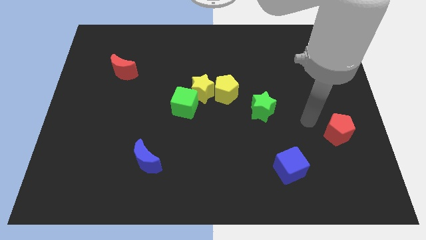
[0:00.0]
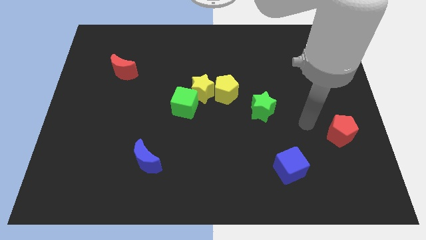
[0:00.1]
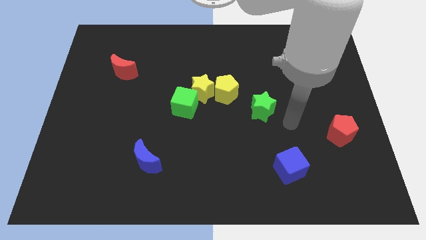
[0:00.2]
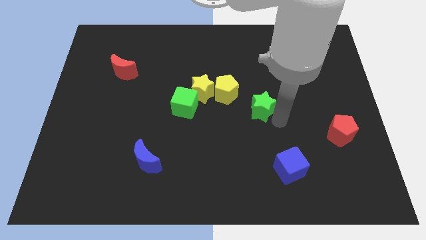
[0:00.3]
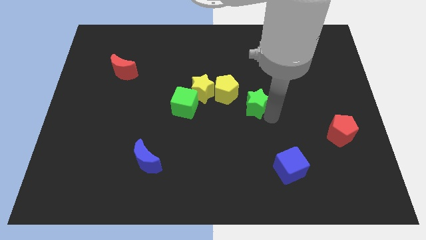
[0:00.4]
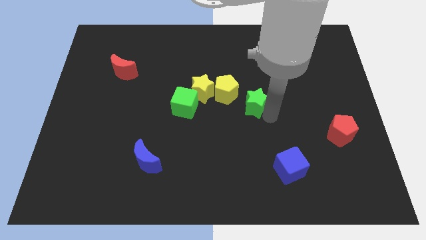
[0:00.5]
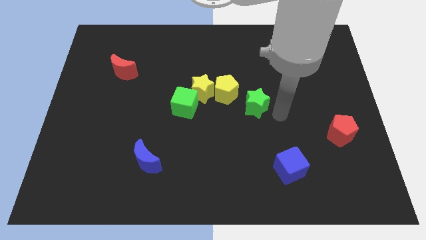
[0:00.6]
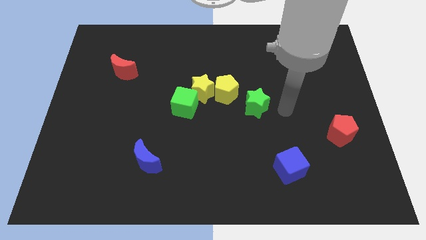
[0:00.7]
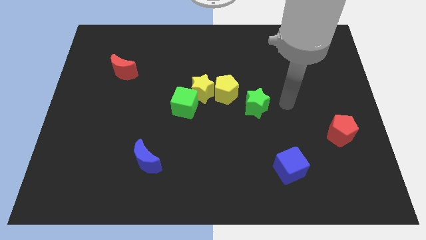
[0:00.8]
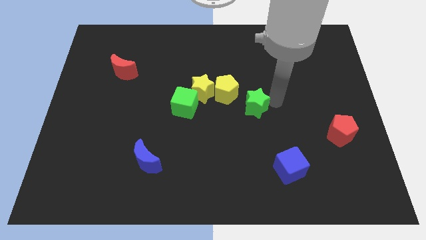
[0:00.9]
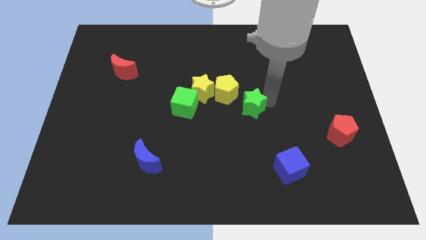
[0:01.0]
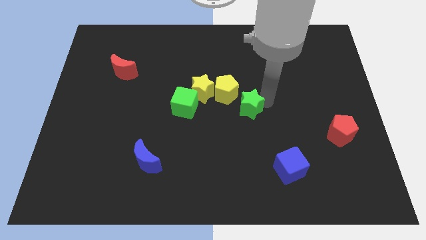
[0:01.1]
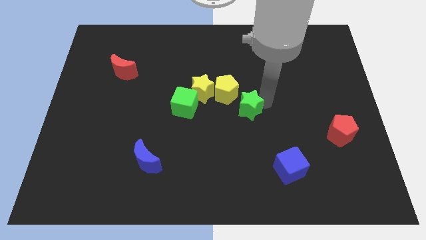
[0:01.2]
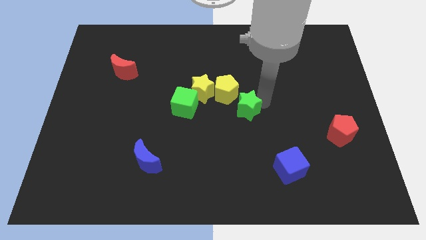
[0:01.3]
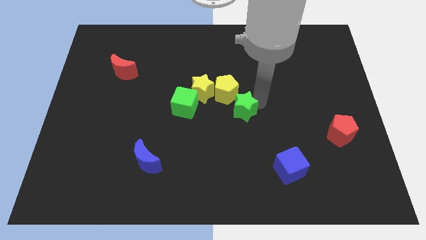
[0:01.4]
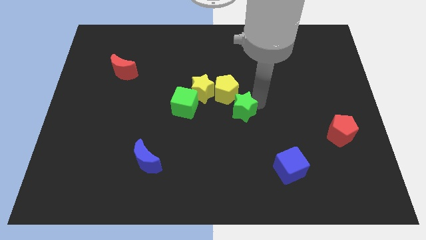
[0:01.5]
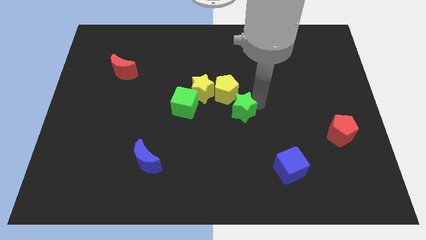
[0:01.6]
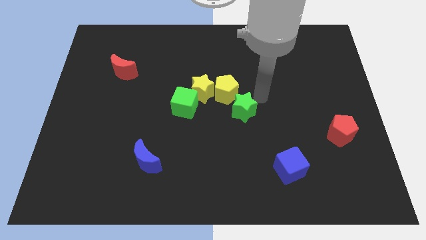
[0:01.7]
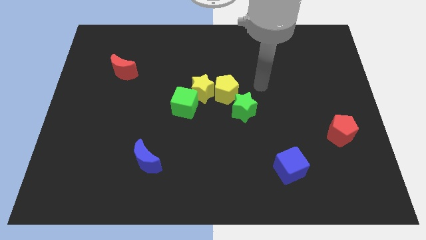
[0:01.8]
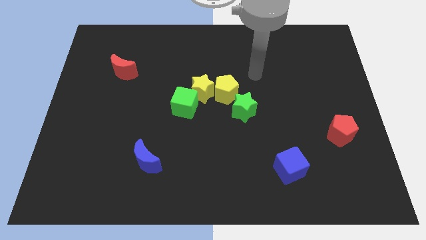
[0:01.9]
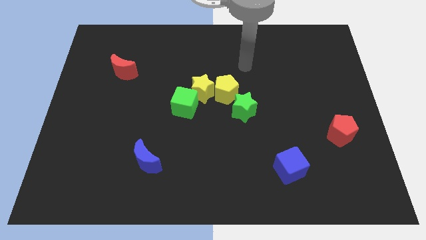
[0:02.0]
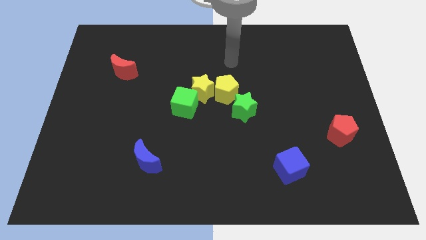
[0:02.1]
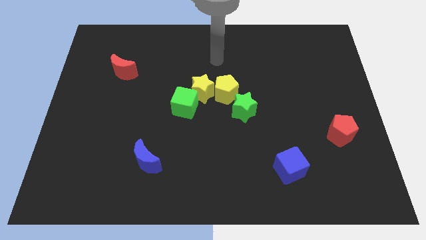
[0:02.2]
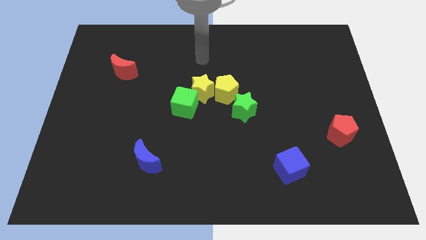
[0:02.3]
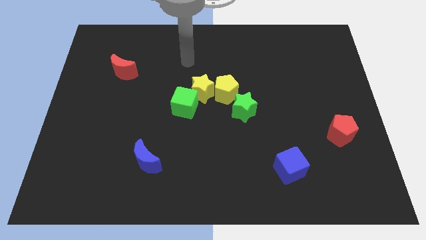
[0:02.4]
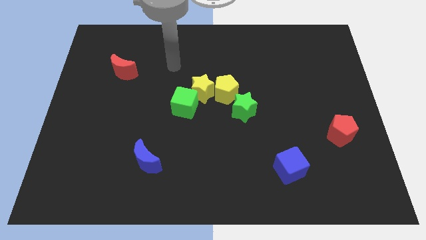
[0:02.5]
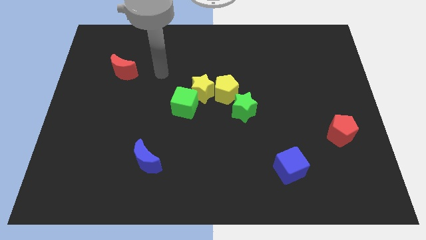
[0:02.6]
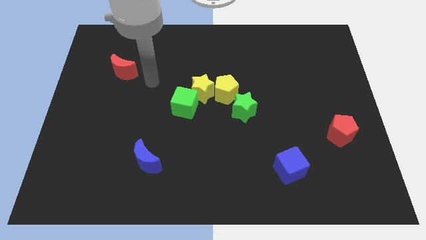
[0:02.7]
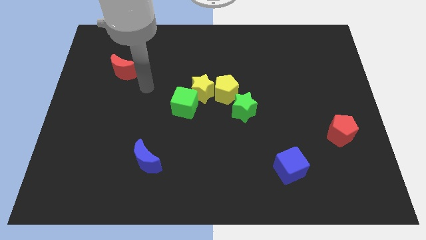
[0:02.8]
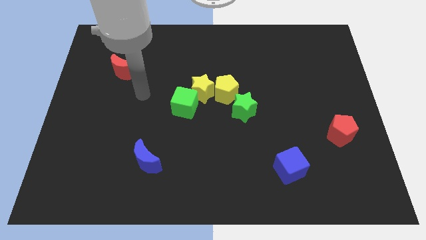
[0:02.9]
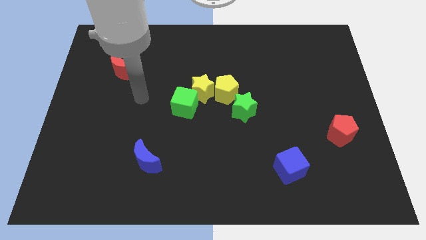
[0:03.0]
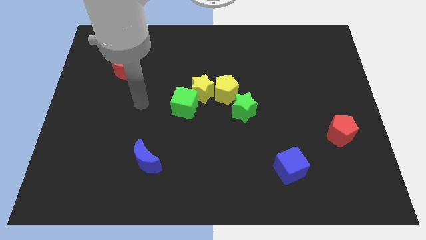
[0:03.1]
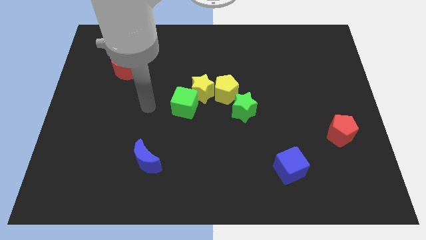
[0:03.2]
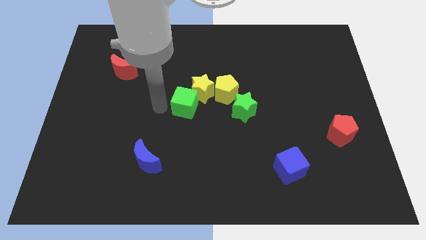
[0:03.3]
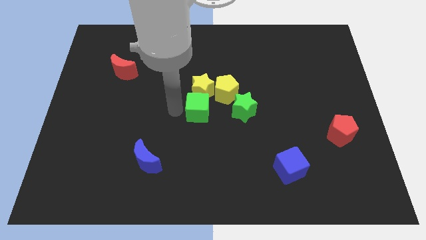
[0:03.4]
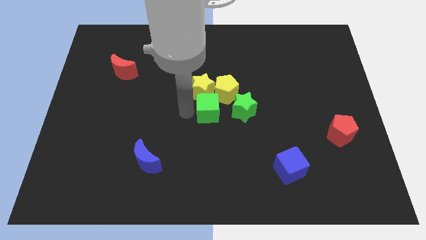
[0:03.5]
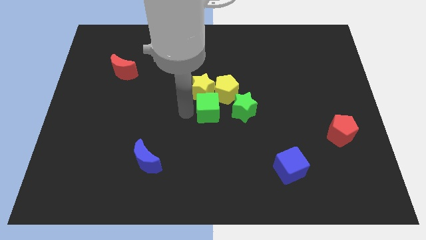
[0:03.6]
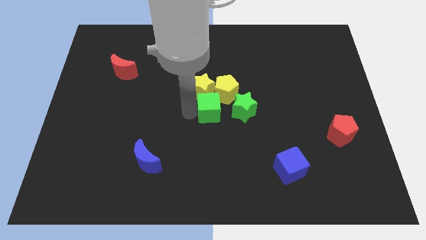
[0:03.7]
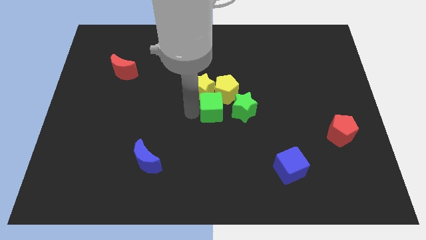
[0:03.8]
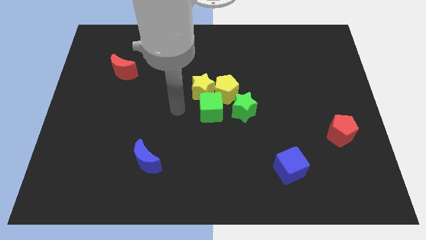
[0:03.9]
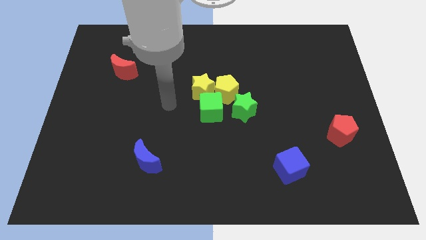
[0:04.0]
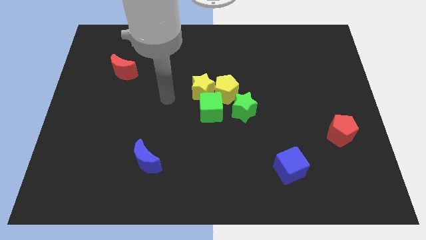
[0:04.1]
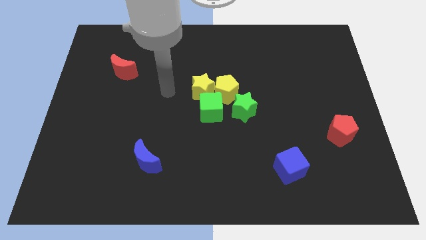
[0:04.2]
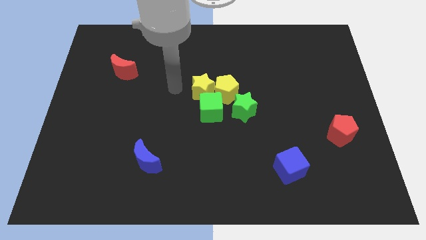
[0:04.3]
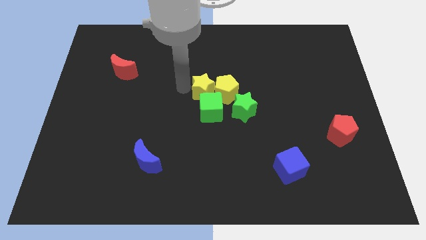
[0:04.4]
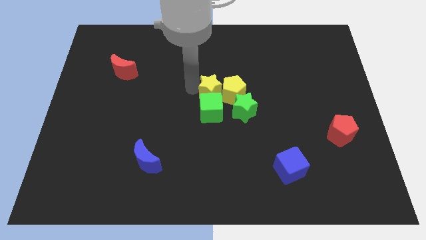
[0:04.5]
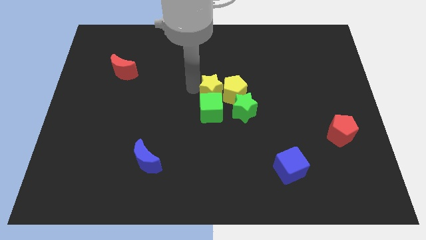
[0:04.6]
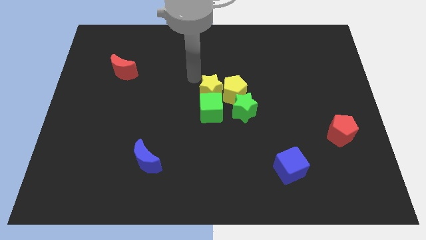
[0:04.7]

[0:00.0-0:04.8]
adjust the green blocks at the center of the board

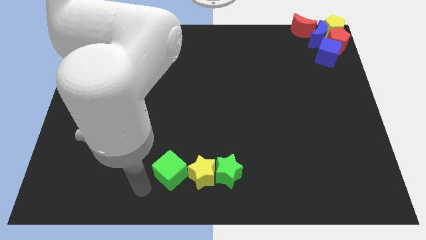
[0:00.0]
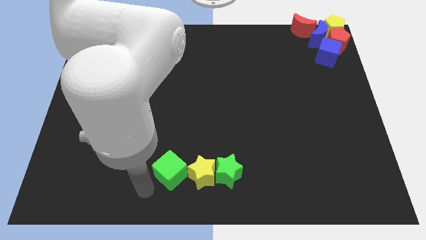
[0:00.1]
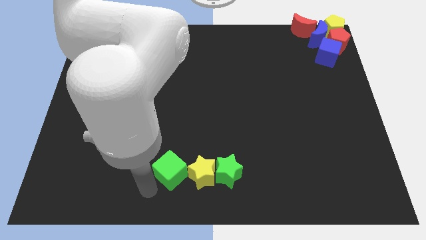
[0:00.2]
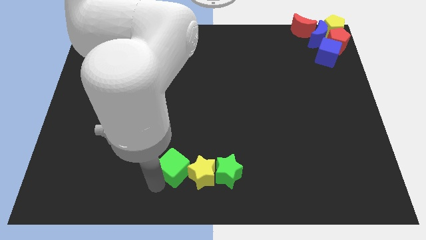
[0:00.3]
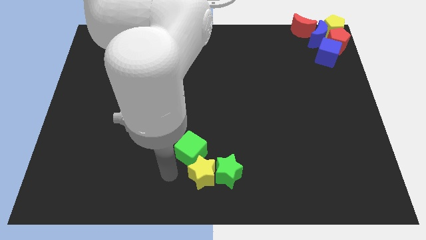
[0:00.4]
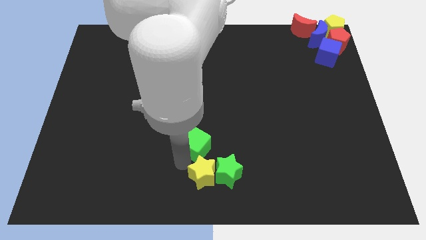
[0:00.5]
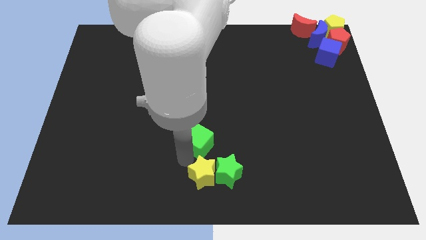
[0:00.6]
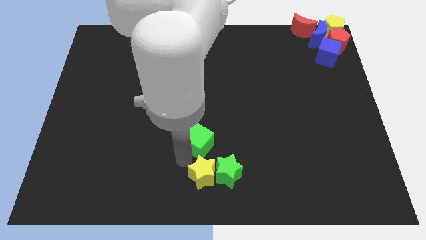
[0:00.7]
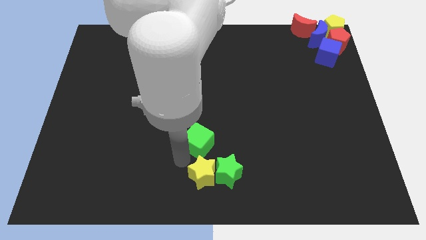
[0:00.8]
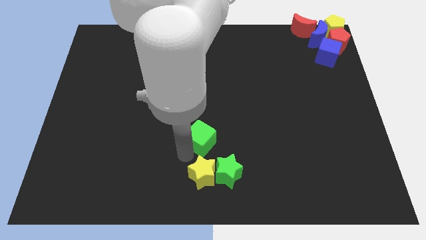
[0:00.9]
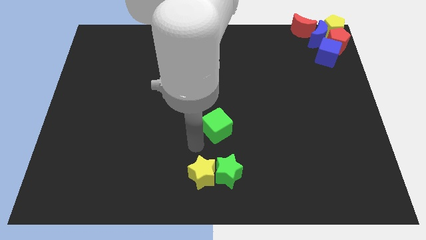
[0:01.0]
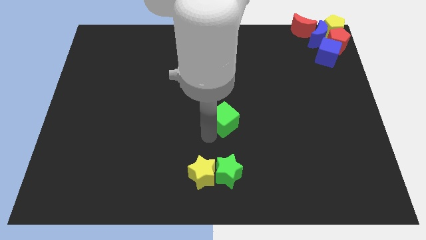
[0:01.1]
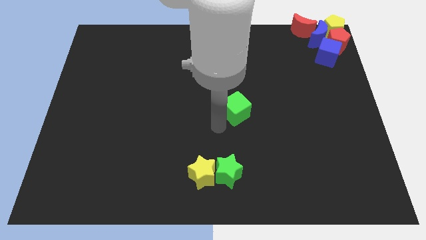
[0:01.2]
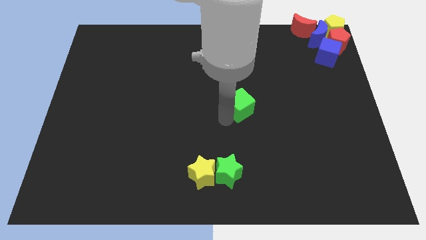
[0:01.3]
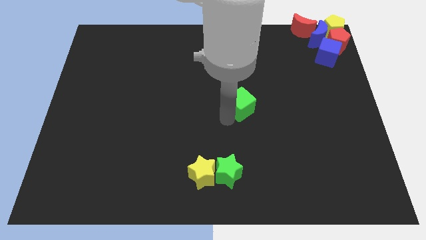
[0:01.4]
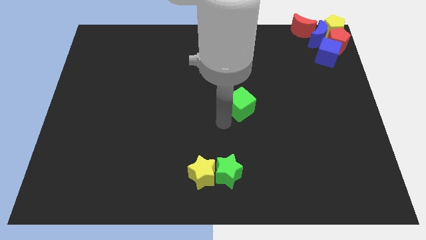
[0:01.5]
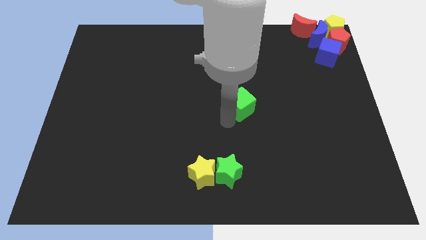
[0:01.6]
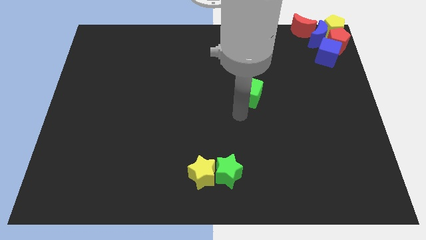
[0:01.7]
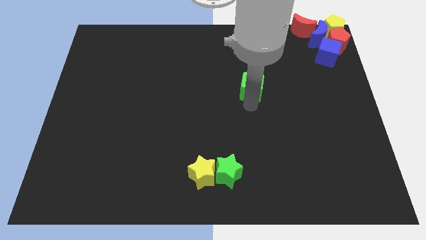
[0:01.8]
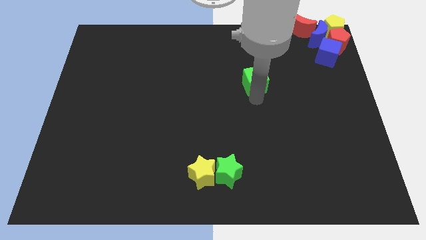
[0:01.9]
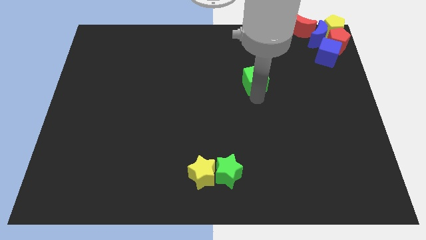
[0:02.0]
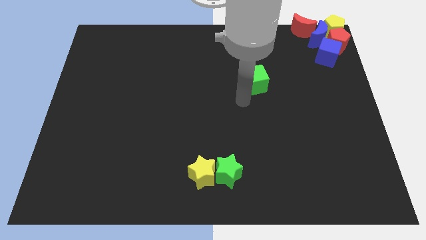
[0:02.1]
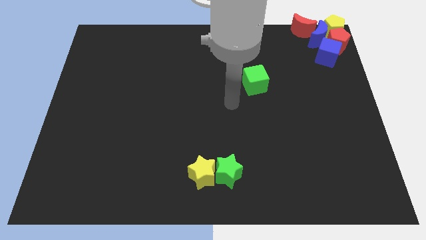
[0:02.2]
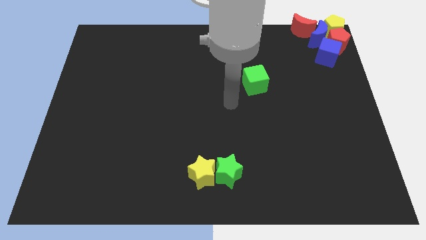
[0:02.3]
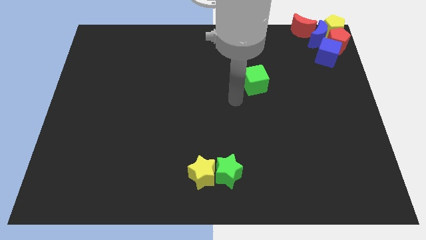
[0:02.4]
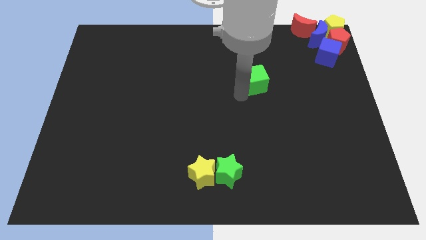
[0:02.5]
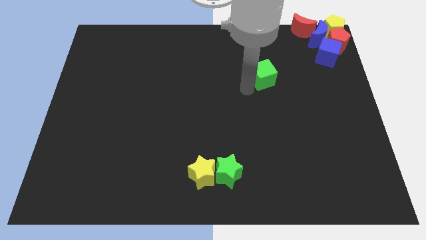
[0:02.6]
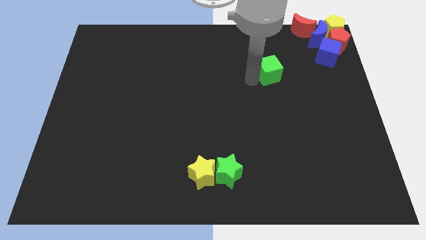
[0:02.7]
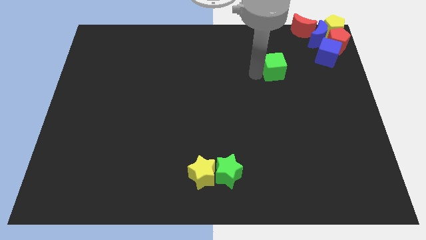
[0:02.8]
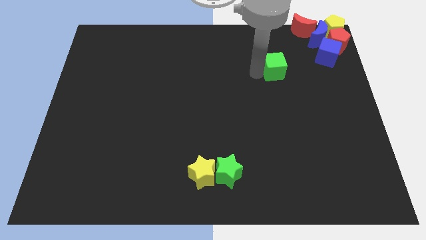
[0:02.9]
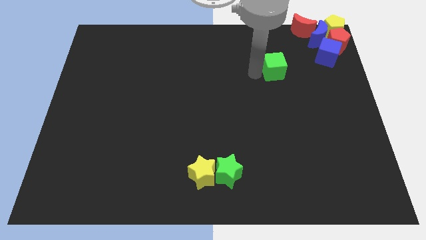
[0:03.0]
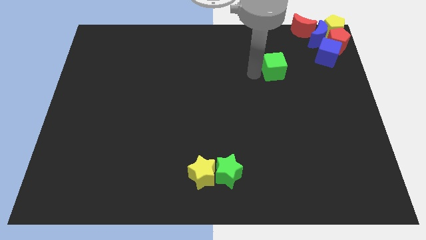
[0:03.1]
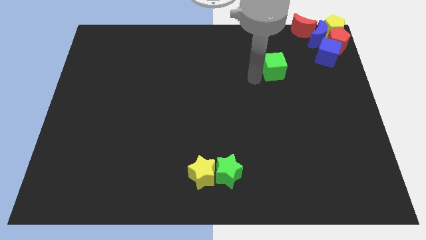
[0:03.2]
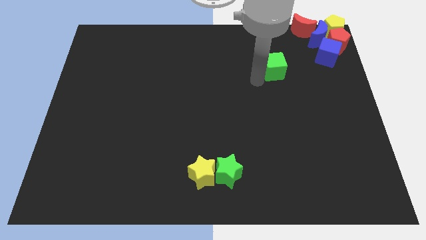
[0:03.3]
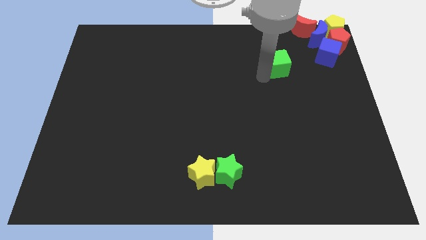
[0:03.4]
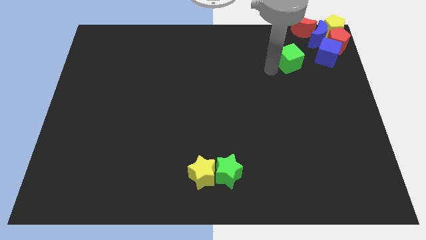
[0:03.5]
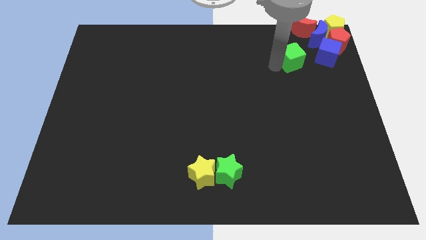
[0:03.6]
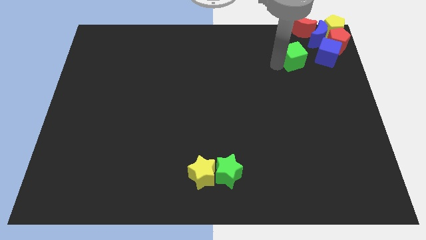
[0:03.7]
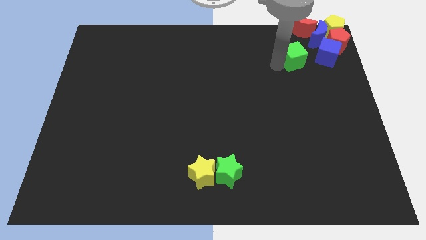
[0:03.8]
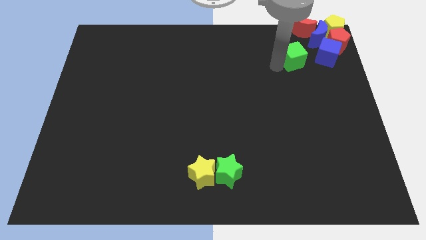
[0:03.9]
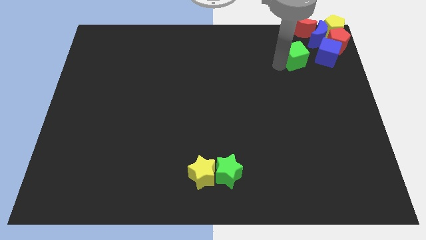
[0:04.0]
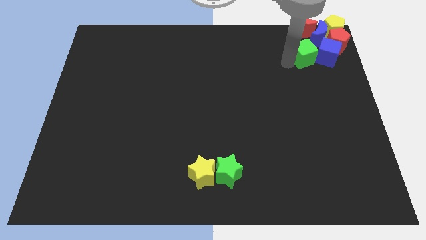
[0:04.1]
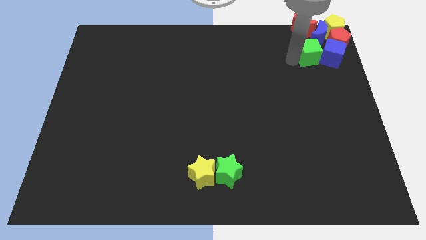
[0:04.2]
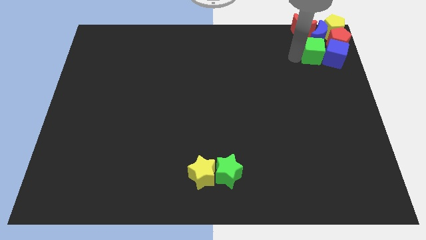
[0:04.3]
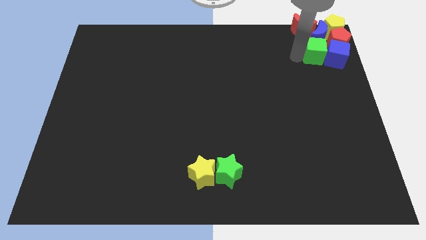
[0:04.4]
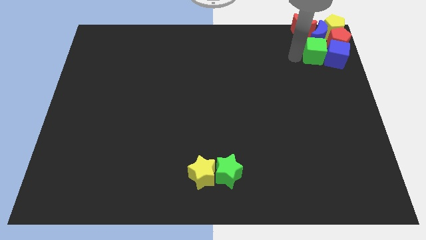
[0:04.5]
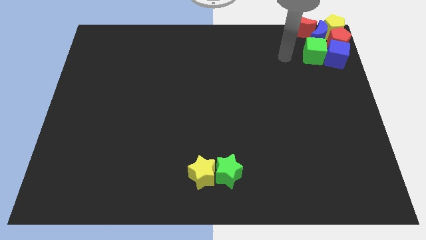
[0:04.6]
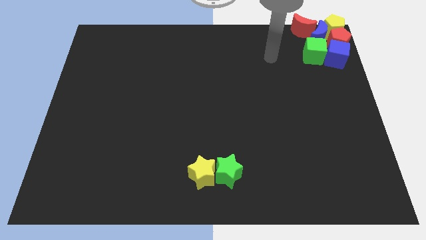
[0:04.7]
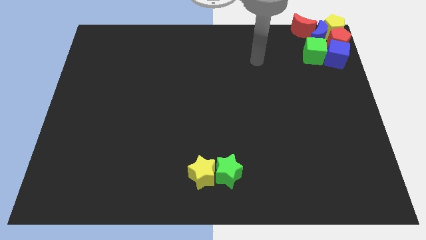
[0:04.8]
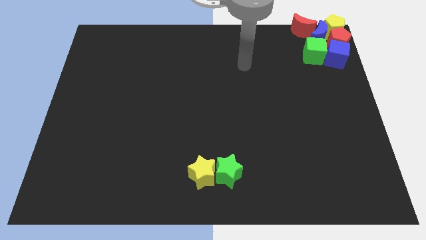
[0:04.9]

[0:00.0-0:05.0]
push the green cube to the left of the blue cube
